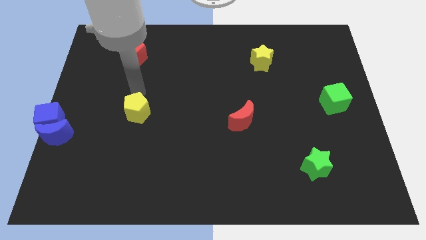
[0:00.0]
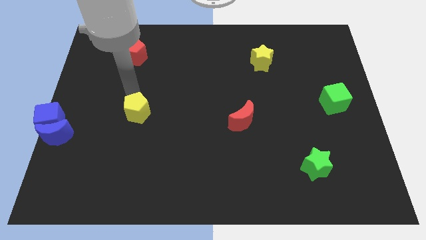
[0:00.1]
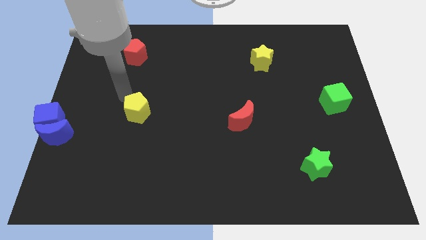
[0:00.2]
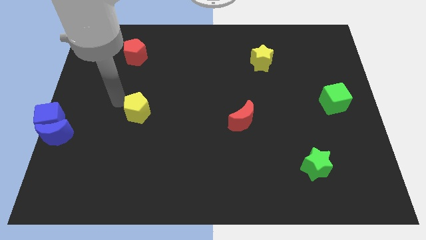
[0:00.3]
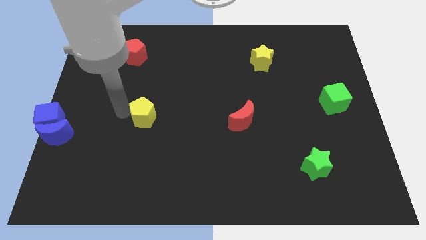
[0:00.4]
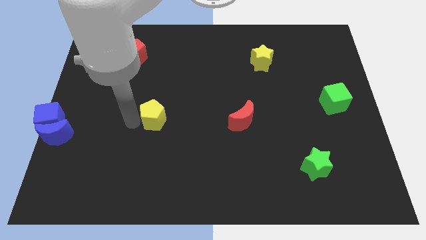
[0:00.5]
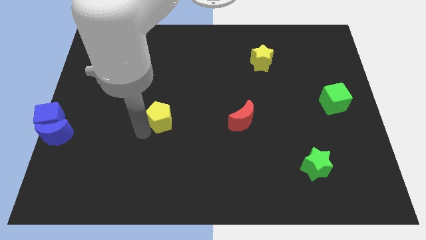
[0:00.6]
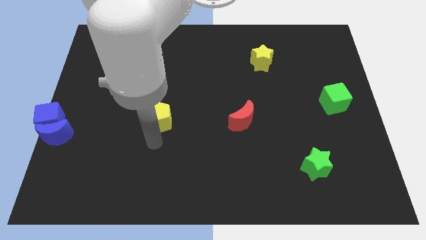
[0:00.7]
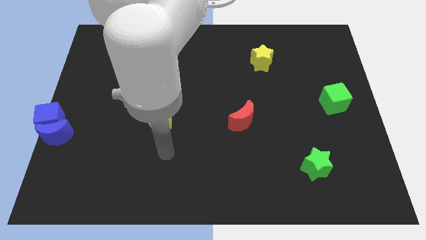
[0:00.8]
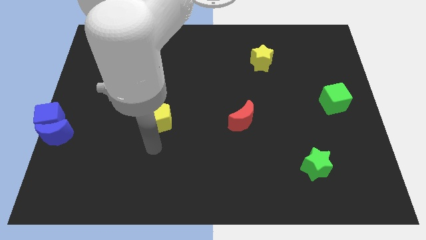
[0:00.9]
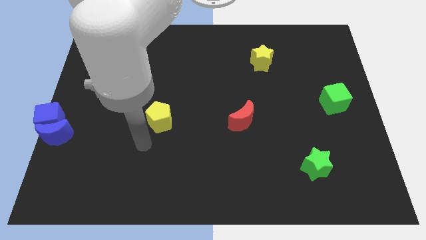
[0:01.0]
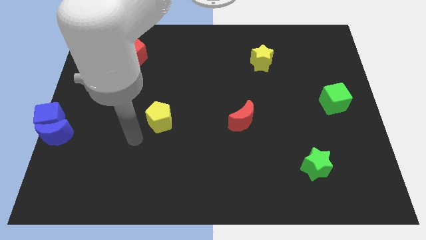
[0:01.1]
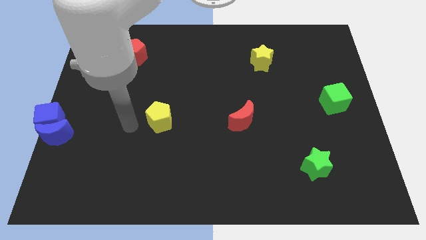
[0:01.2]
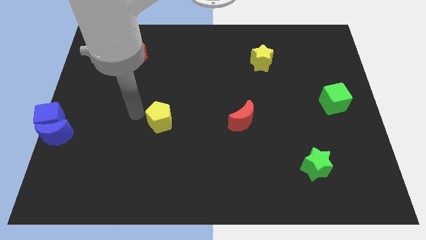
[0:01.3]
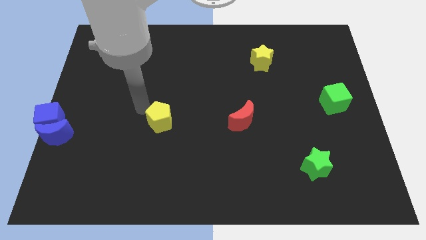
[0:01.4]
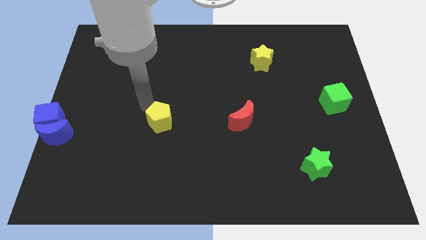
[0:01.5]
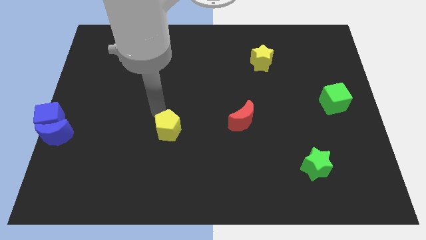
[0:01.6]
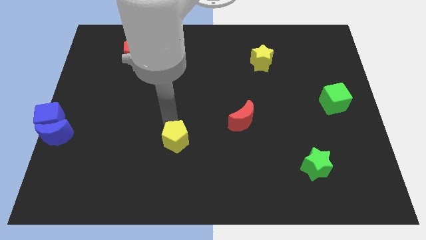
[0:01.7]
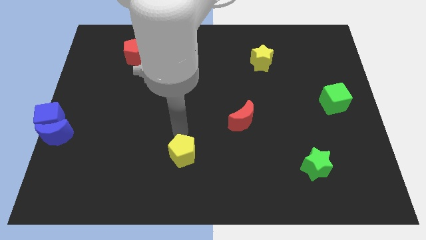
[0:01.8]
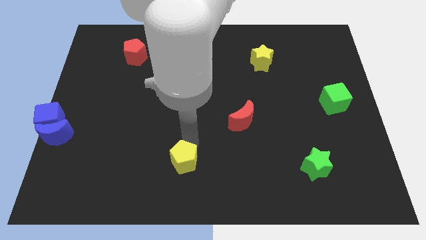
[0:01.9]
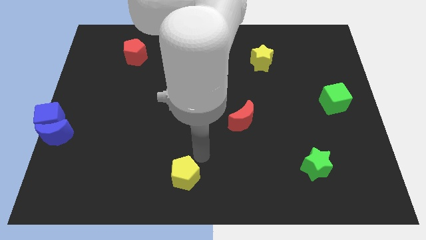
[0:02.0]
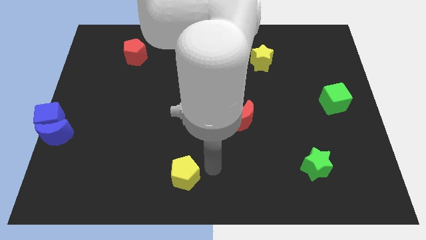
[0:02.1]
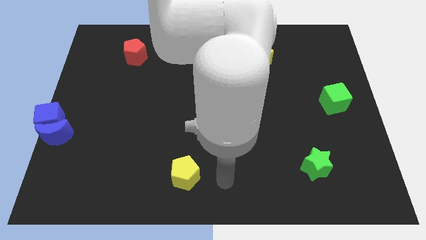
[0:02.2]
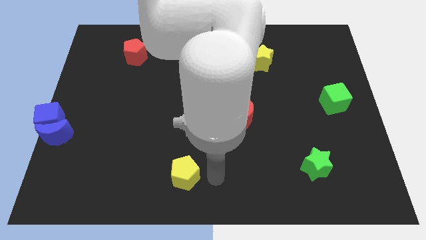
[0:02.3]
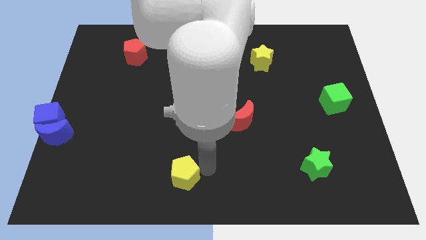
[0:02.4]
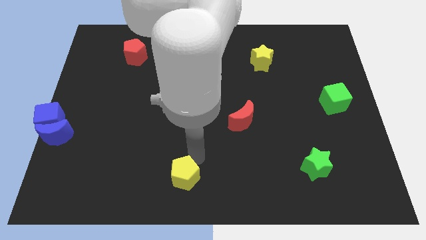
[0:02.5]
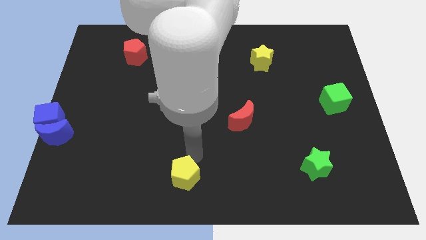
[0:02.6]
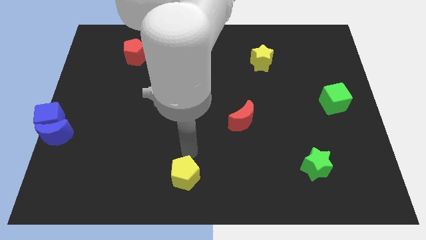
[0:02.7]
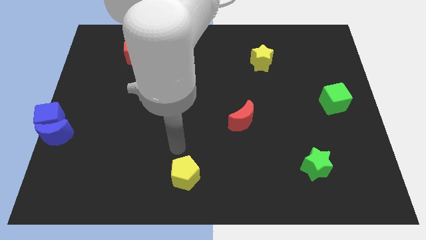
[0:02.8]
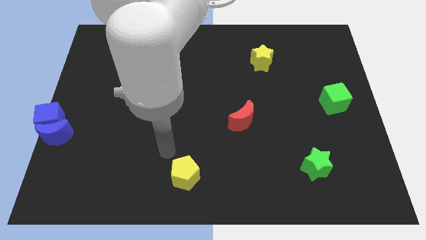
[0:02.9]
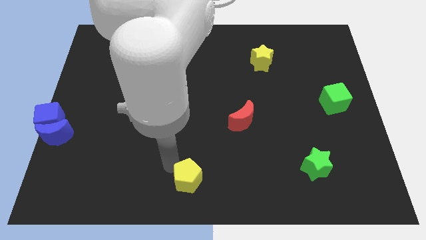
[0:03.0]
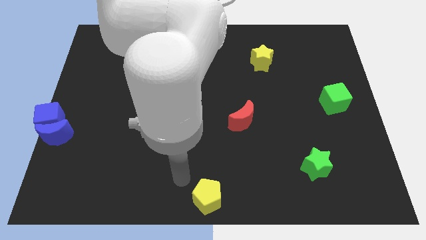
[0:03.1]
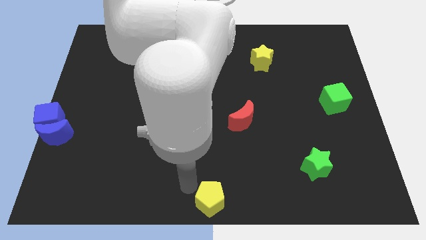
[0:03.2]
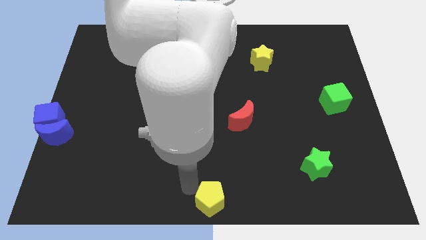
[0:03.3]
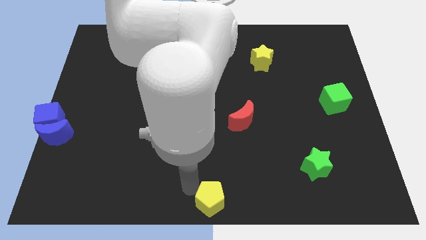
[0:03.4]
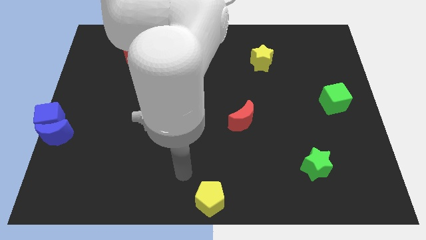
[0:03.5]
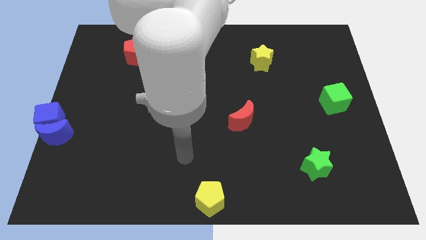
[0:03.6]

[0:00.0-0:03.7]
slide the yellow pentagon to the bottom center of the board

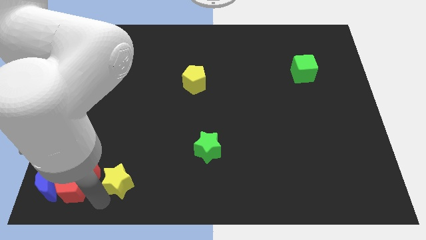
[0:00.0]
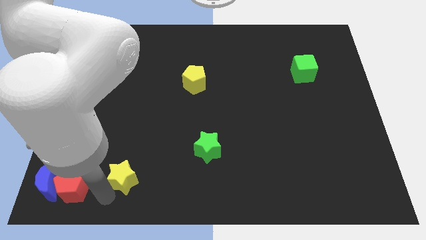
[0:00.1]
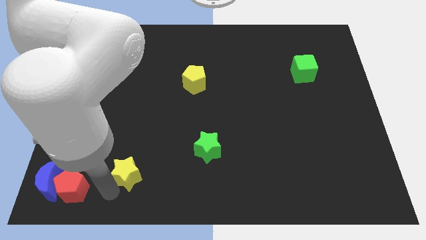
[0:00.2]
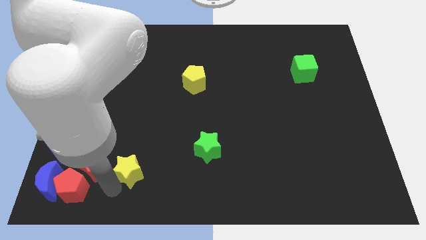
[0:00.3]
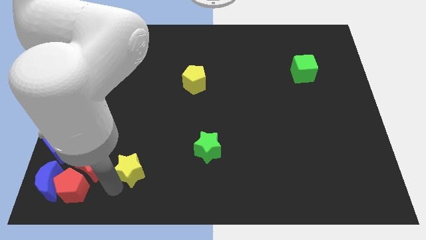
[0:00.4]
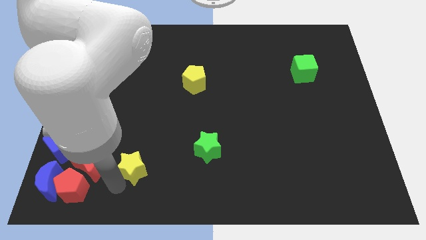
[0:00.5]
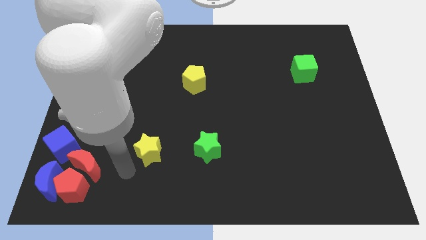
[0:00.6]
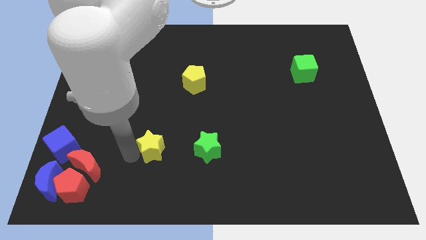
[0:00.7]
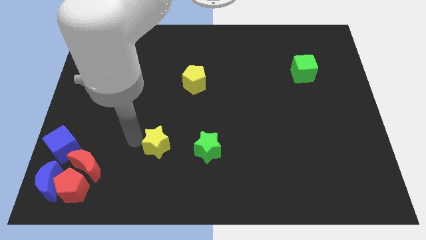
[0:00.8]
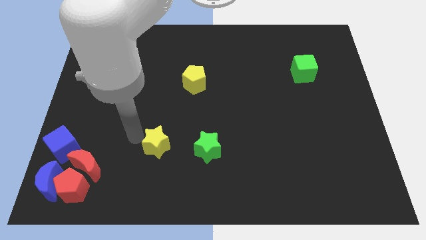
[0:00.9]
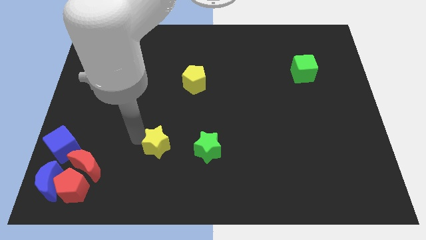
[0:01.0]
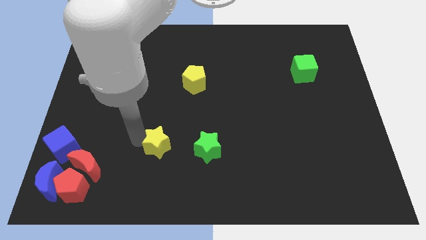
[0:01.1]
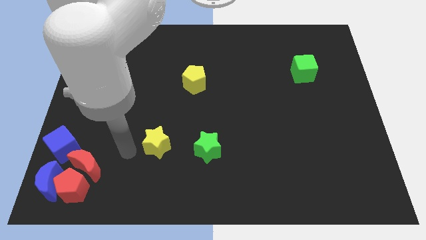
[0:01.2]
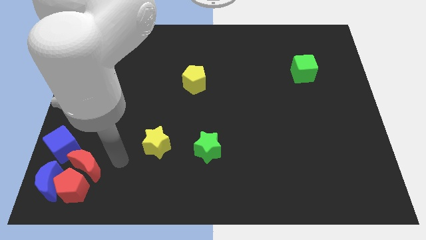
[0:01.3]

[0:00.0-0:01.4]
move the yellow star to the left of the green star

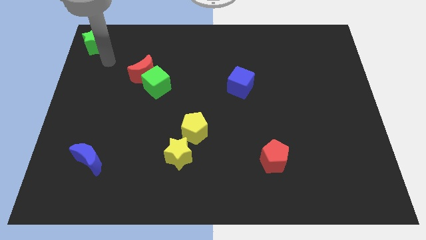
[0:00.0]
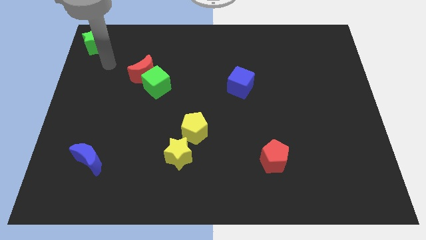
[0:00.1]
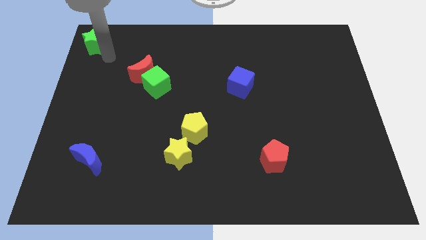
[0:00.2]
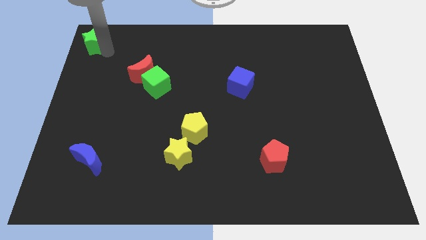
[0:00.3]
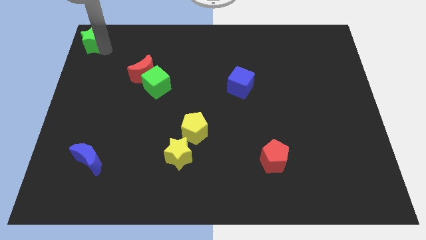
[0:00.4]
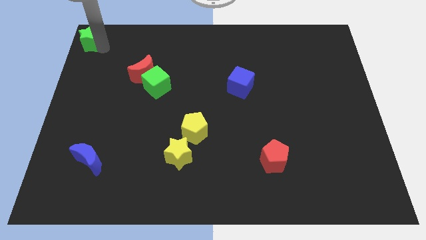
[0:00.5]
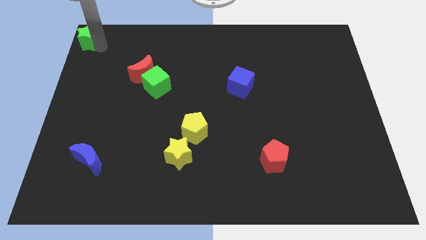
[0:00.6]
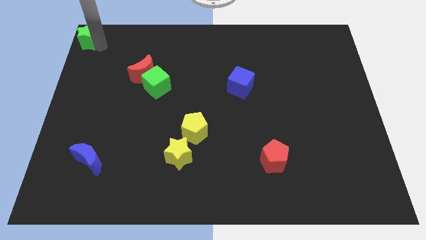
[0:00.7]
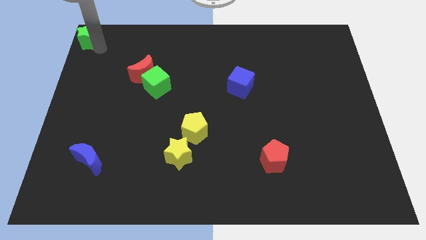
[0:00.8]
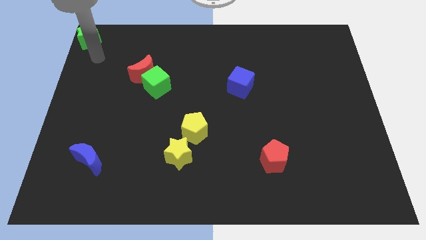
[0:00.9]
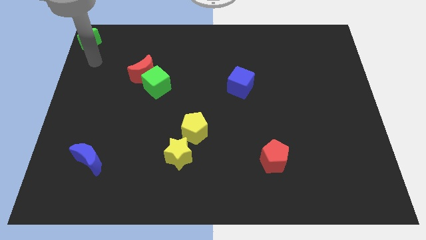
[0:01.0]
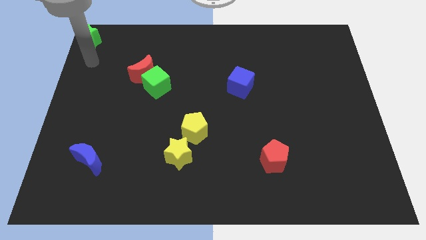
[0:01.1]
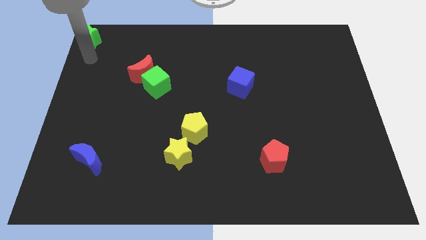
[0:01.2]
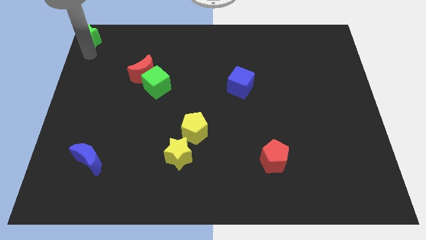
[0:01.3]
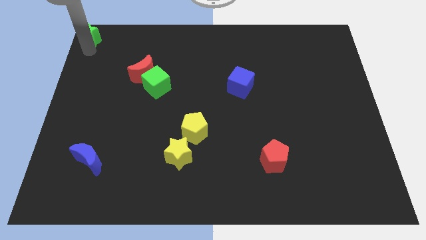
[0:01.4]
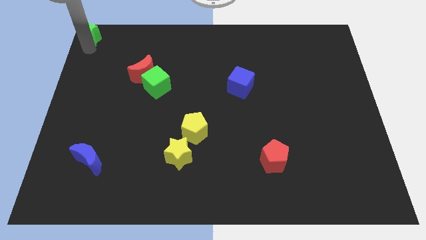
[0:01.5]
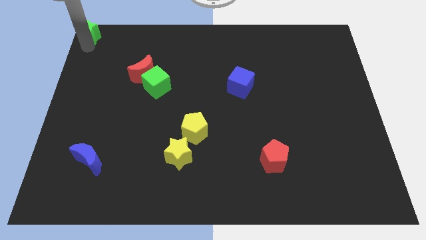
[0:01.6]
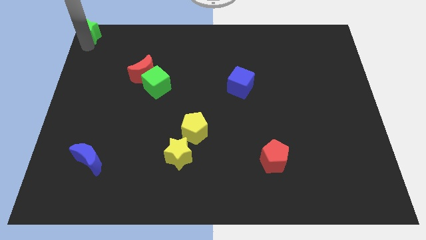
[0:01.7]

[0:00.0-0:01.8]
push the green star towards the top left corner of the board

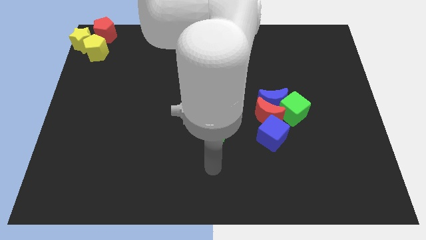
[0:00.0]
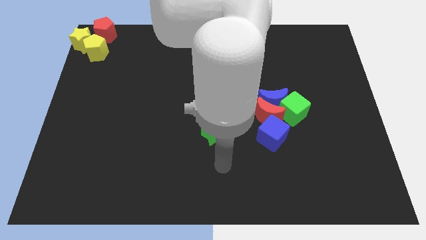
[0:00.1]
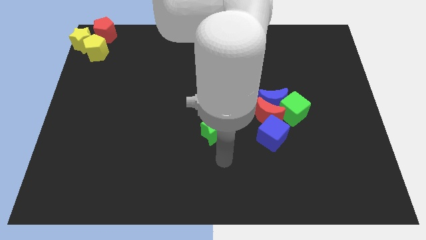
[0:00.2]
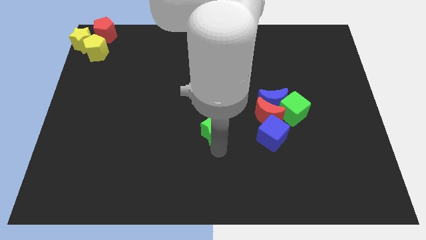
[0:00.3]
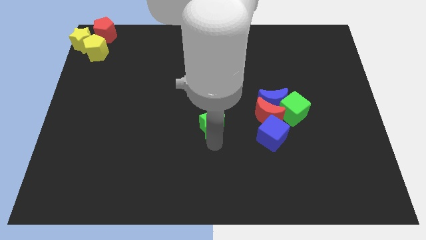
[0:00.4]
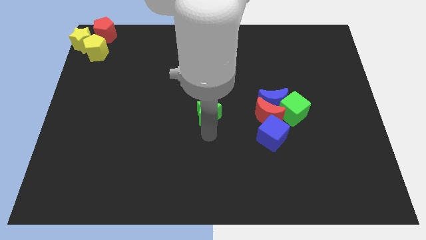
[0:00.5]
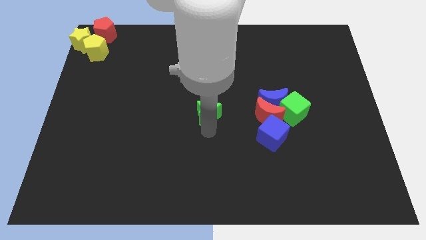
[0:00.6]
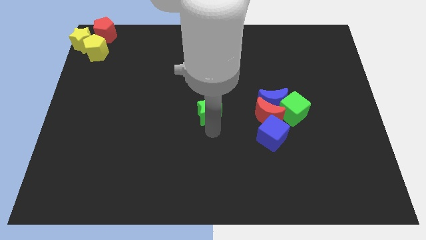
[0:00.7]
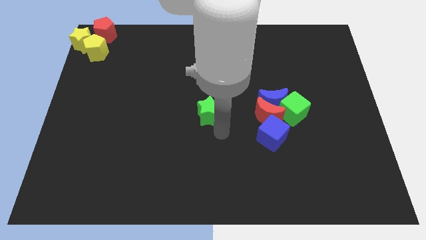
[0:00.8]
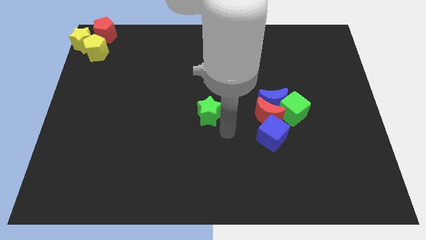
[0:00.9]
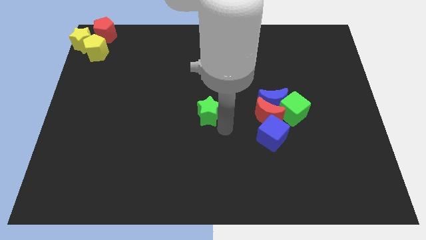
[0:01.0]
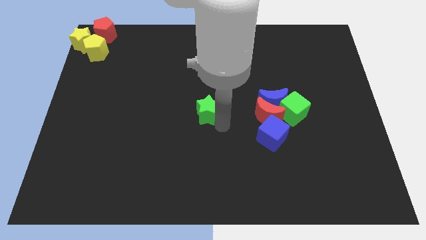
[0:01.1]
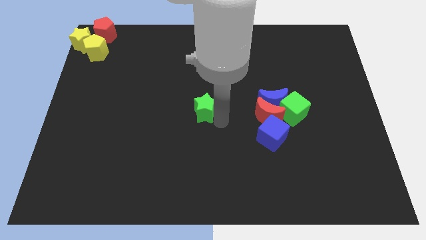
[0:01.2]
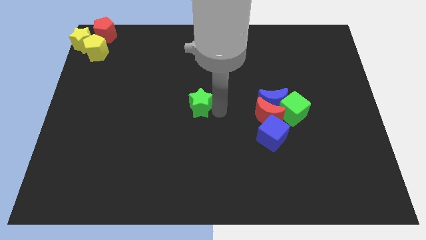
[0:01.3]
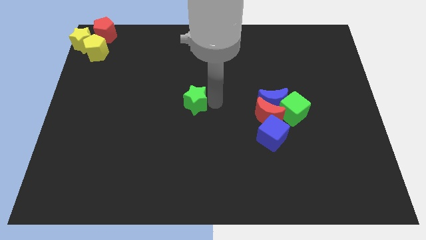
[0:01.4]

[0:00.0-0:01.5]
move green star to the center of the board

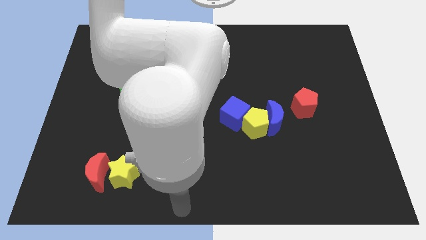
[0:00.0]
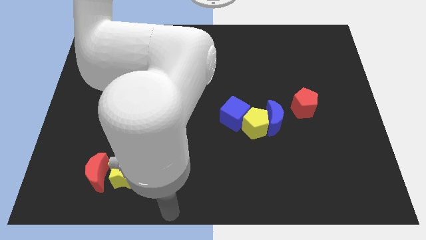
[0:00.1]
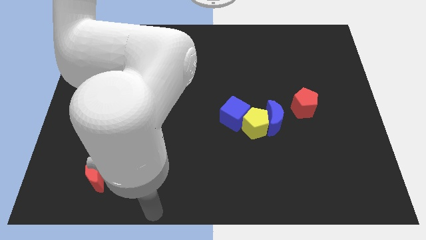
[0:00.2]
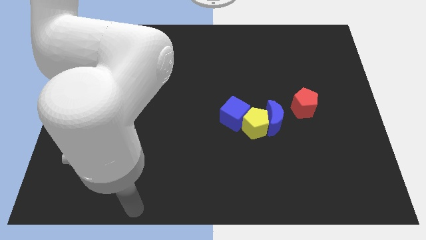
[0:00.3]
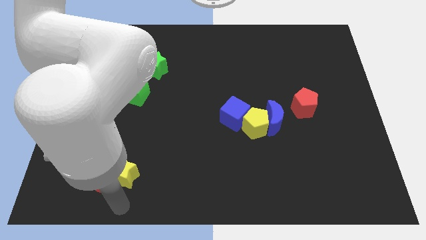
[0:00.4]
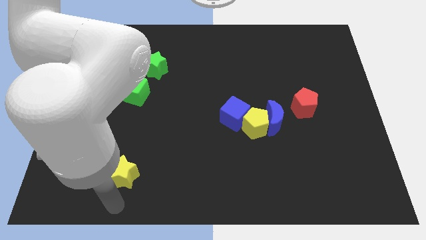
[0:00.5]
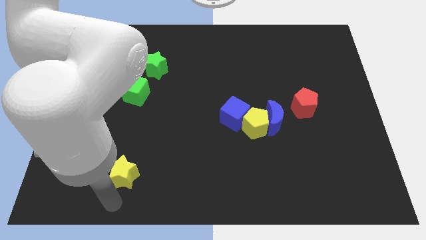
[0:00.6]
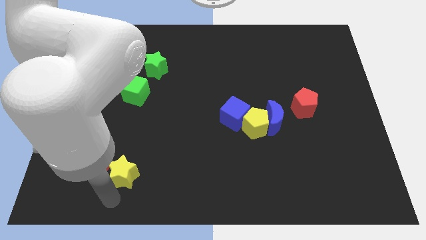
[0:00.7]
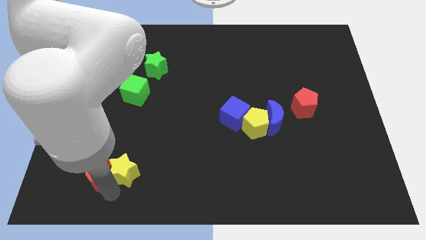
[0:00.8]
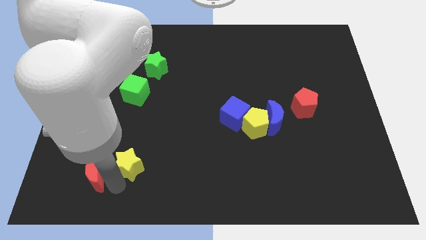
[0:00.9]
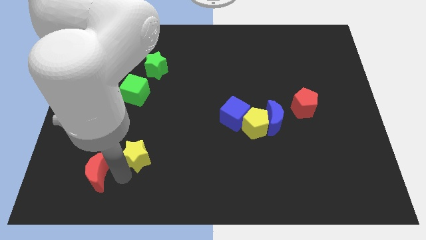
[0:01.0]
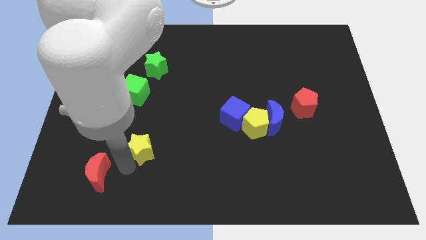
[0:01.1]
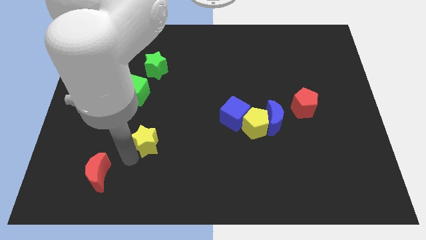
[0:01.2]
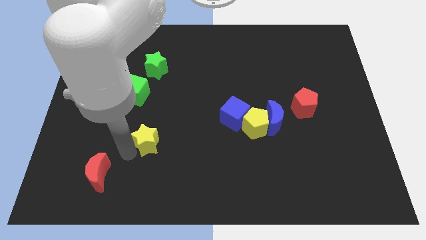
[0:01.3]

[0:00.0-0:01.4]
separate yellow star from the red moon
